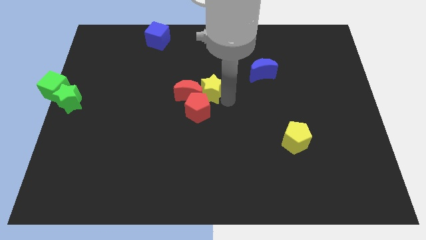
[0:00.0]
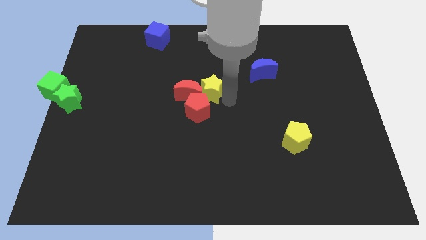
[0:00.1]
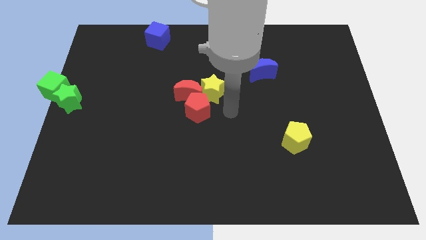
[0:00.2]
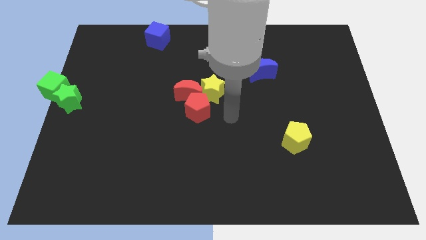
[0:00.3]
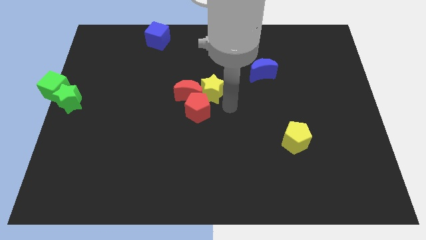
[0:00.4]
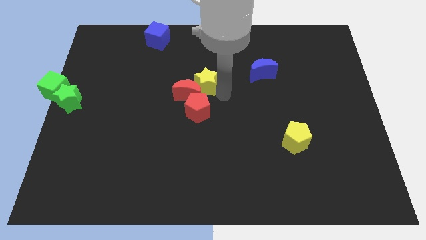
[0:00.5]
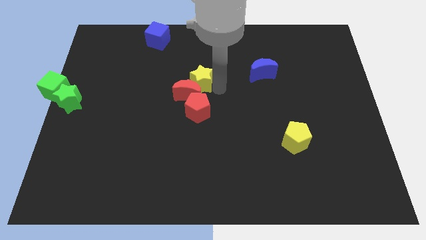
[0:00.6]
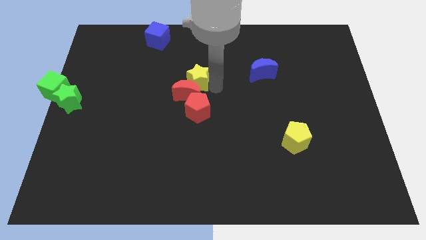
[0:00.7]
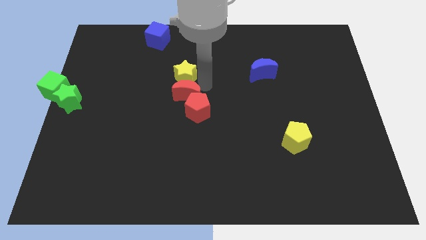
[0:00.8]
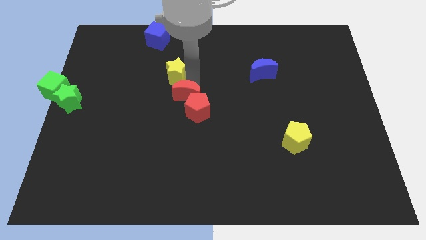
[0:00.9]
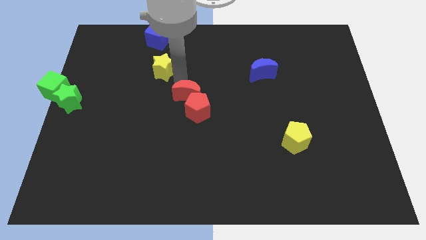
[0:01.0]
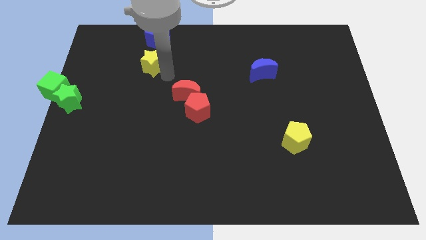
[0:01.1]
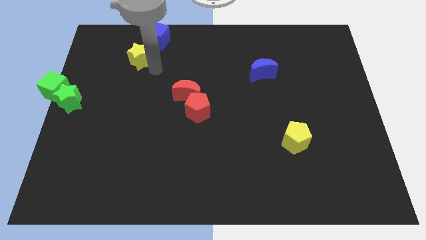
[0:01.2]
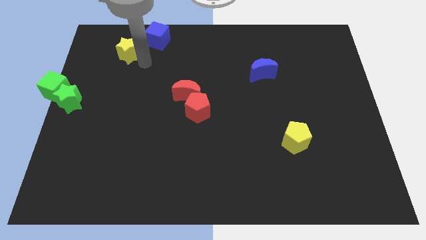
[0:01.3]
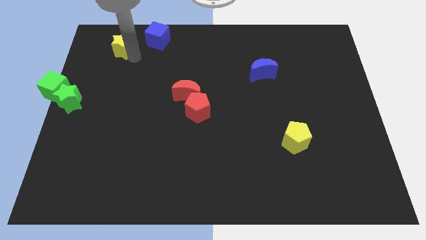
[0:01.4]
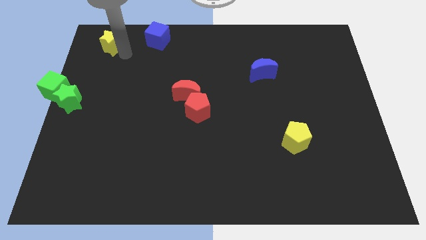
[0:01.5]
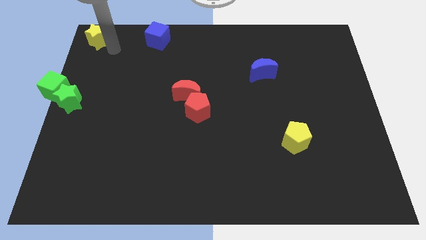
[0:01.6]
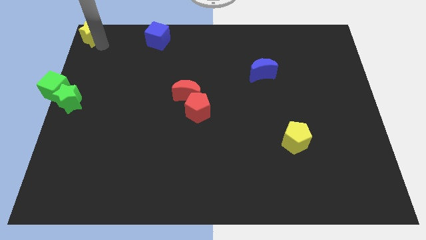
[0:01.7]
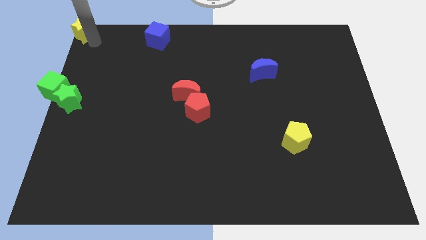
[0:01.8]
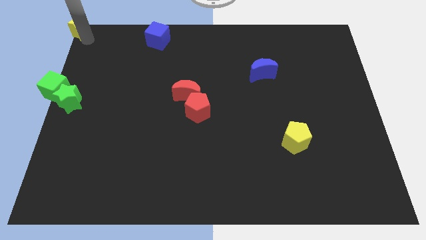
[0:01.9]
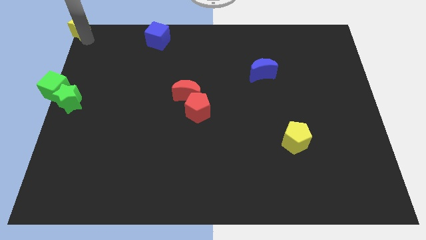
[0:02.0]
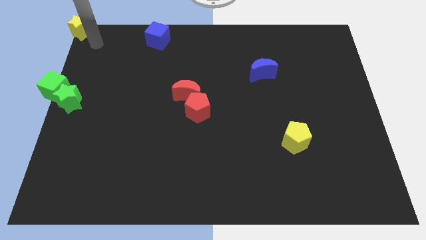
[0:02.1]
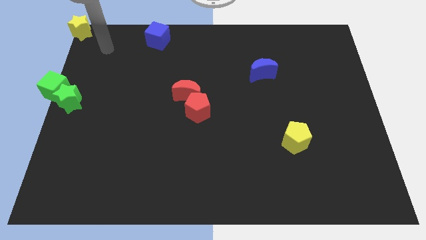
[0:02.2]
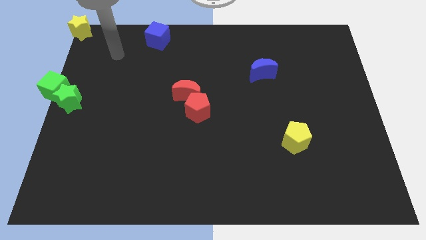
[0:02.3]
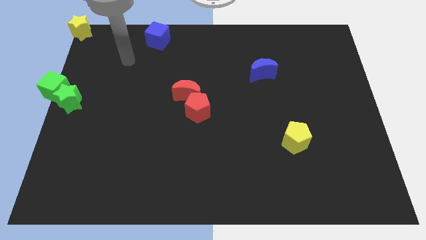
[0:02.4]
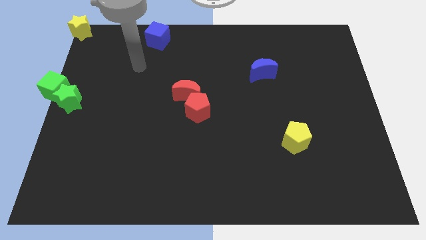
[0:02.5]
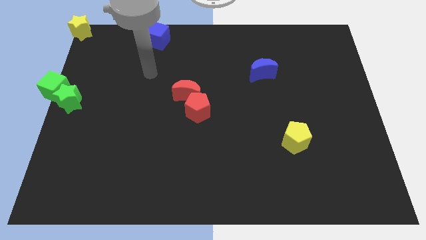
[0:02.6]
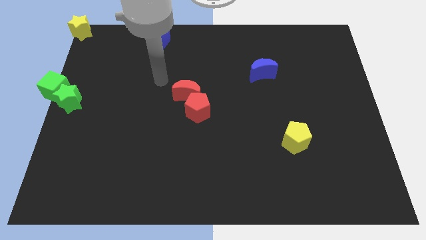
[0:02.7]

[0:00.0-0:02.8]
place yellow star at the top left corner of the board

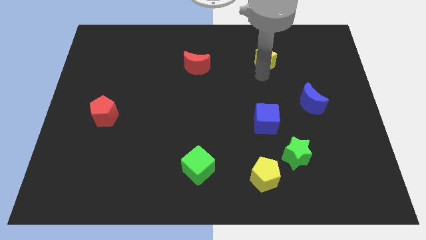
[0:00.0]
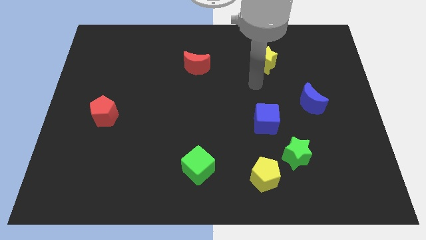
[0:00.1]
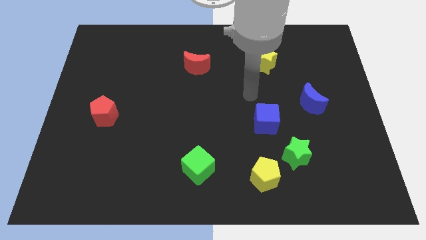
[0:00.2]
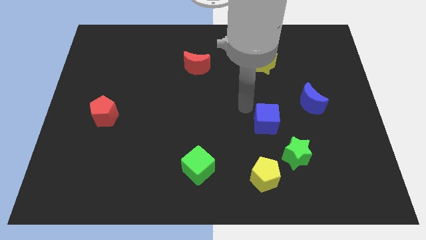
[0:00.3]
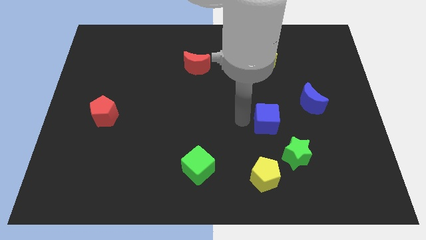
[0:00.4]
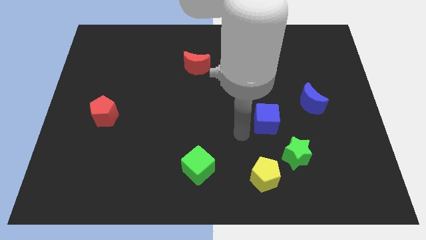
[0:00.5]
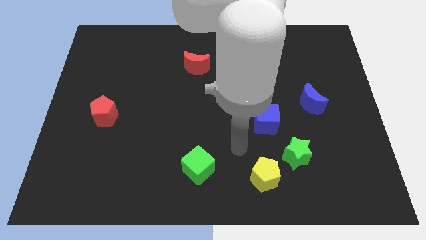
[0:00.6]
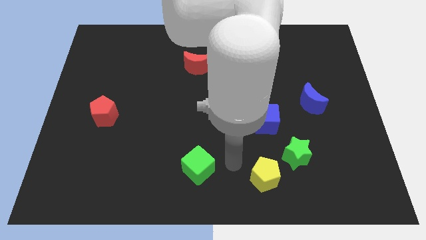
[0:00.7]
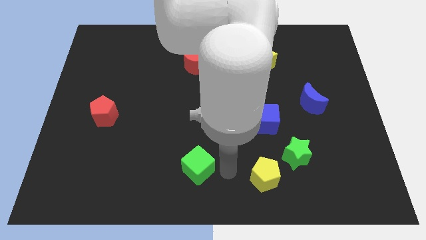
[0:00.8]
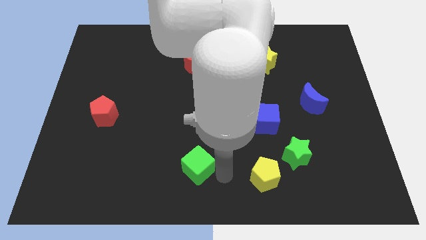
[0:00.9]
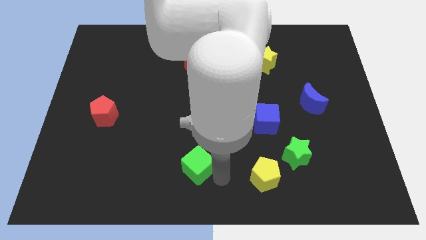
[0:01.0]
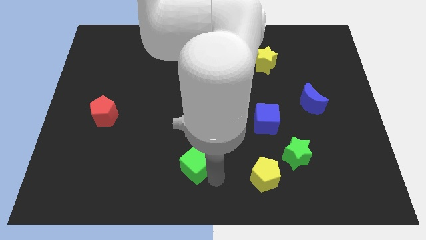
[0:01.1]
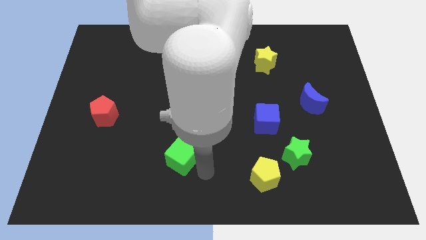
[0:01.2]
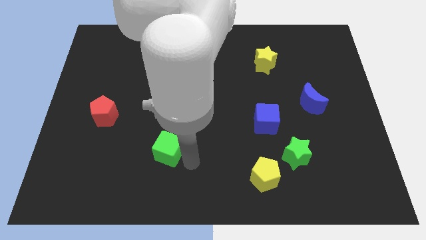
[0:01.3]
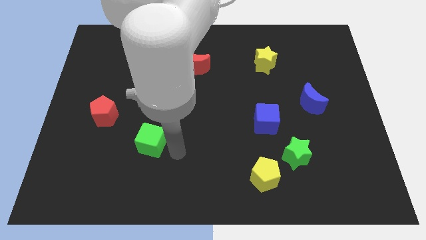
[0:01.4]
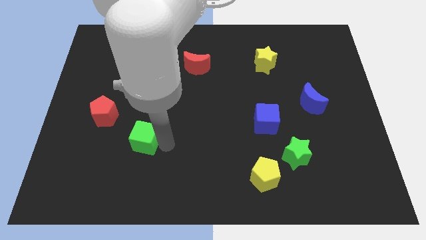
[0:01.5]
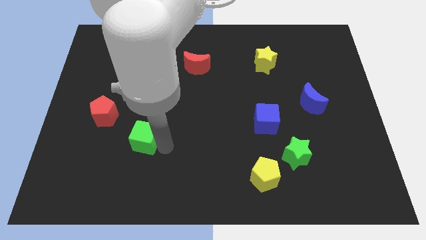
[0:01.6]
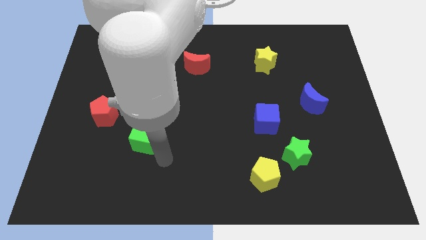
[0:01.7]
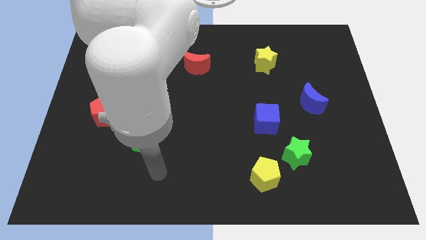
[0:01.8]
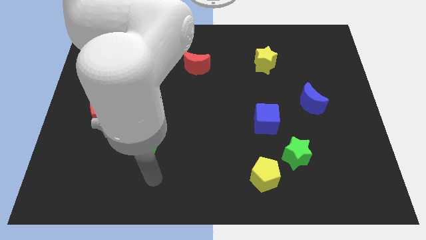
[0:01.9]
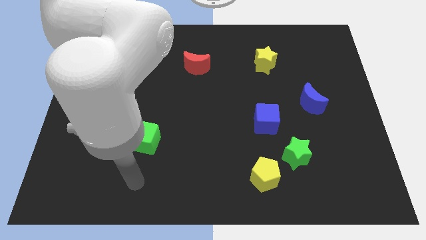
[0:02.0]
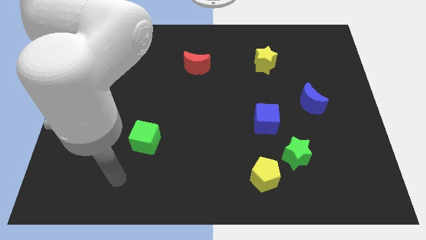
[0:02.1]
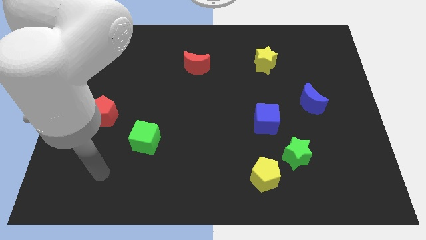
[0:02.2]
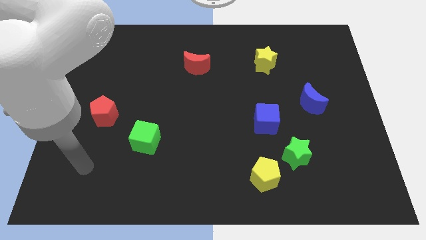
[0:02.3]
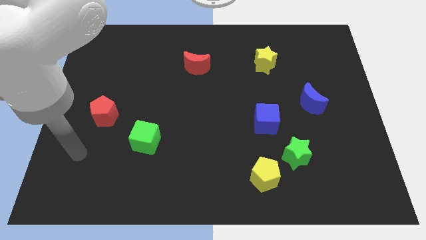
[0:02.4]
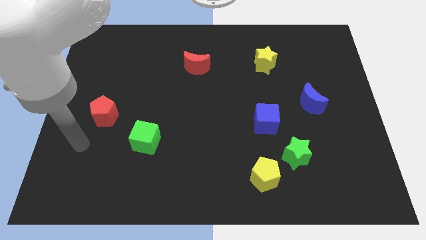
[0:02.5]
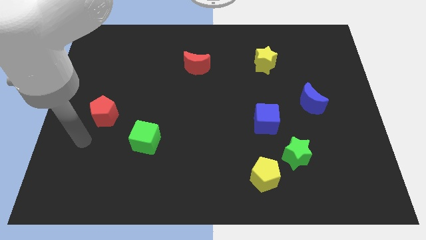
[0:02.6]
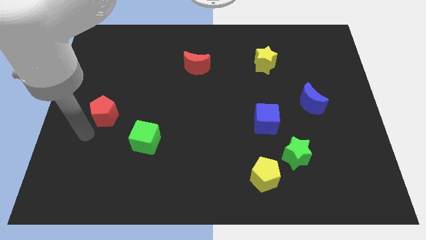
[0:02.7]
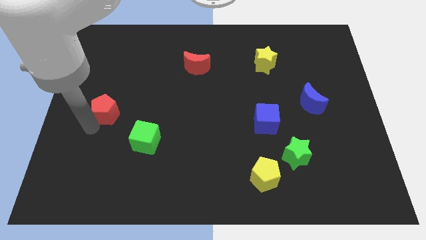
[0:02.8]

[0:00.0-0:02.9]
push the green cube diagonally to red pentagon

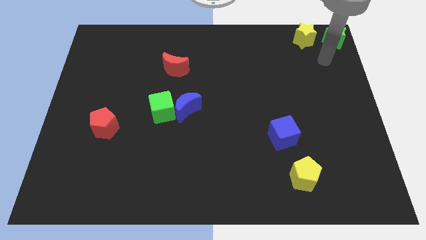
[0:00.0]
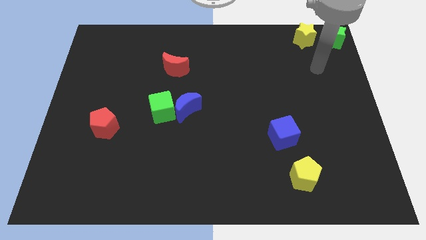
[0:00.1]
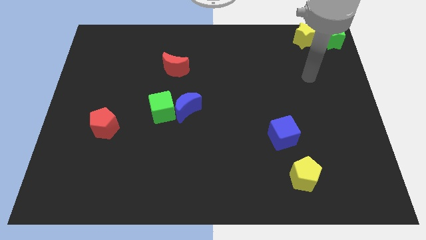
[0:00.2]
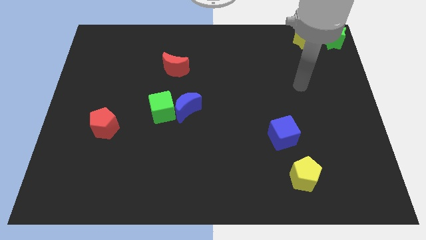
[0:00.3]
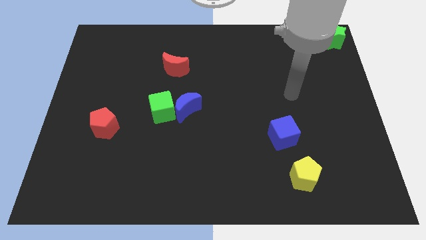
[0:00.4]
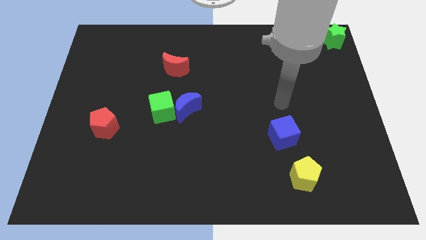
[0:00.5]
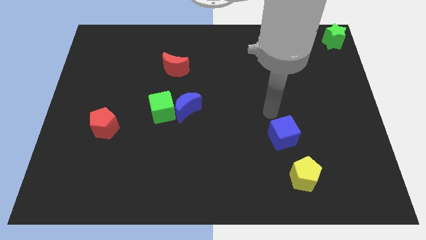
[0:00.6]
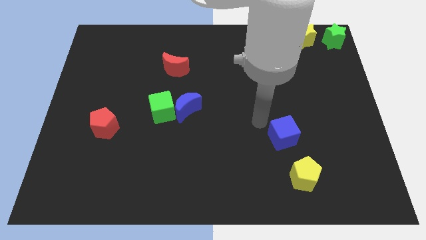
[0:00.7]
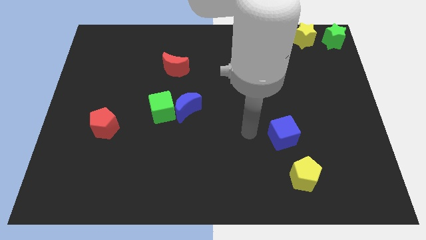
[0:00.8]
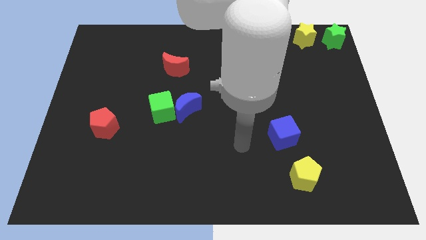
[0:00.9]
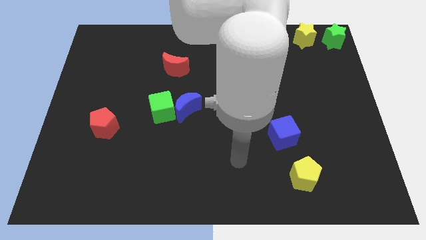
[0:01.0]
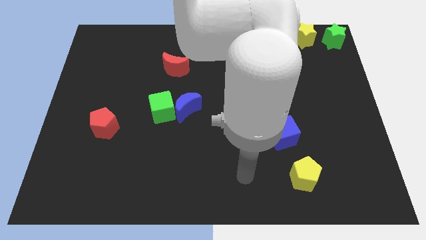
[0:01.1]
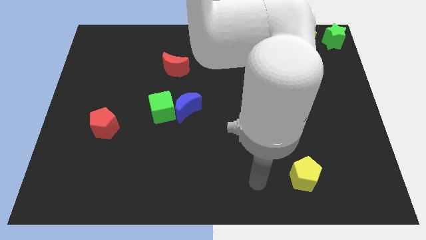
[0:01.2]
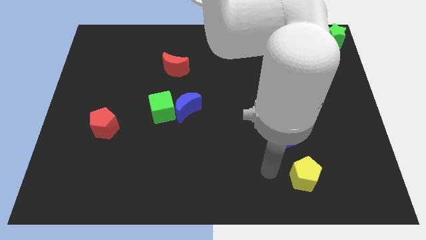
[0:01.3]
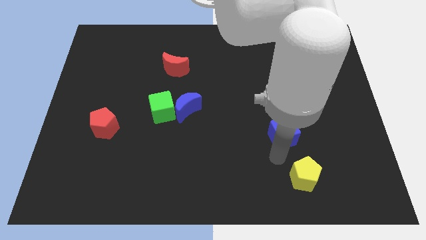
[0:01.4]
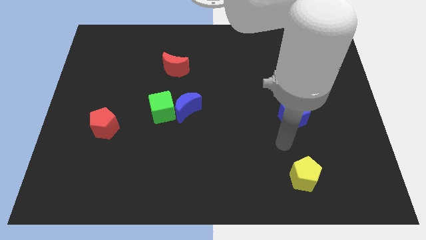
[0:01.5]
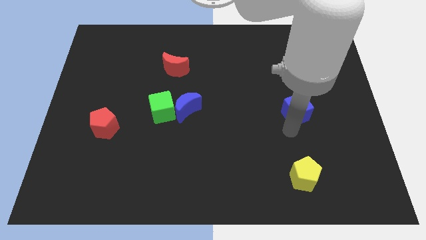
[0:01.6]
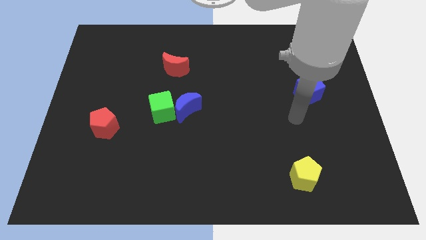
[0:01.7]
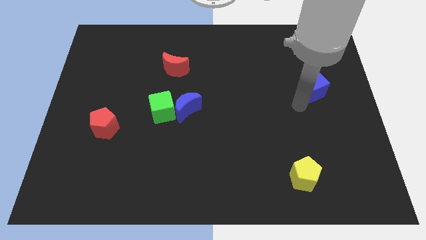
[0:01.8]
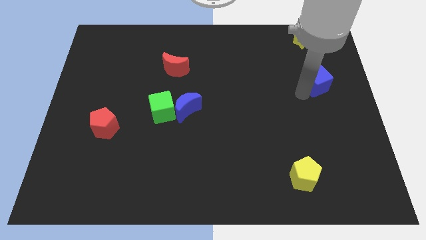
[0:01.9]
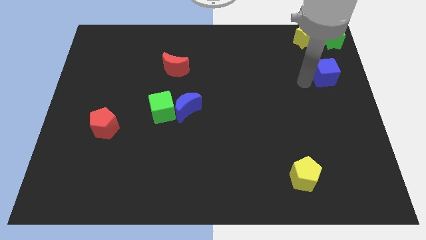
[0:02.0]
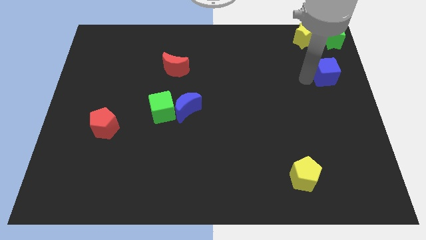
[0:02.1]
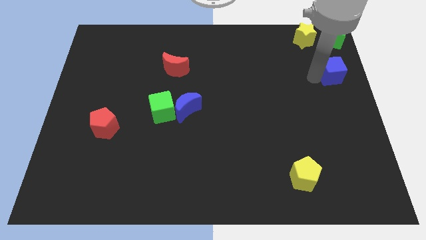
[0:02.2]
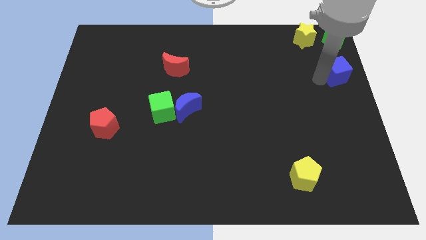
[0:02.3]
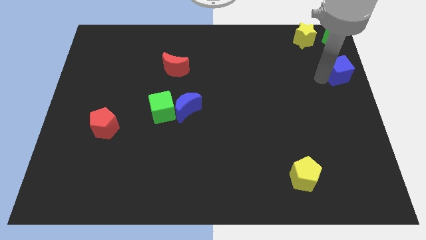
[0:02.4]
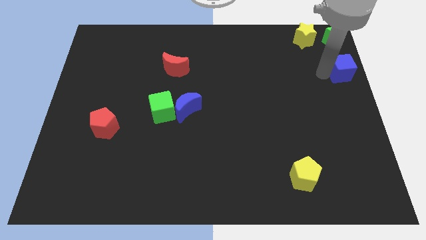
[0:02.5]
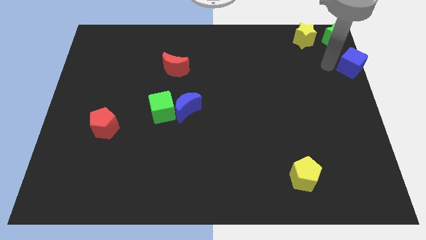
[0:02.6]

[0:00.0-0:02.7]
push the blue cube towards the green star

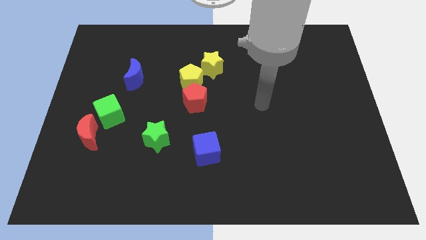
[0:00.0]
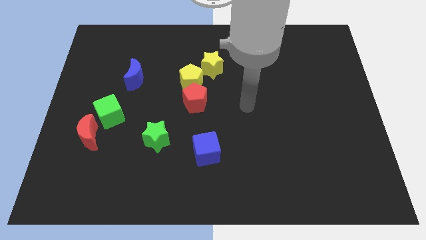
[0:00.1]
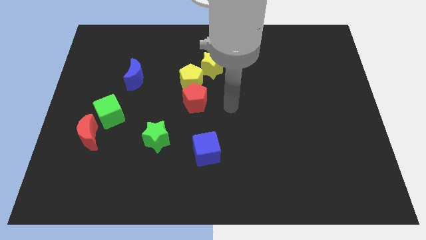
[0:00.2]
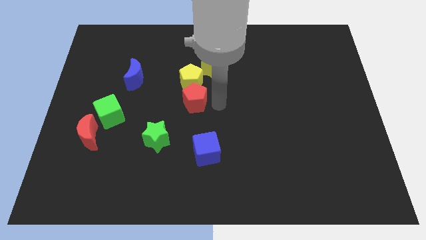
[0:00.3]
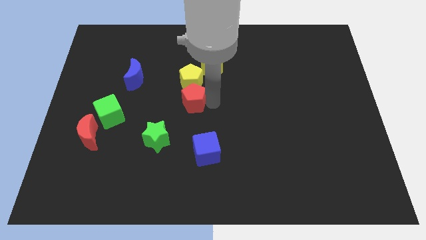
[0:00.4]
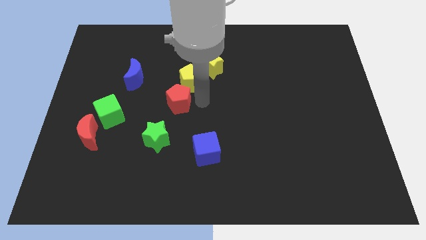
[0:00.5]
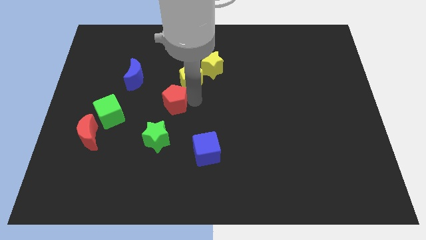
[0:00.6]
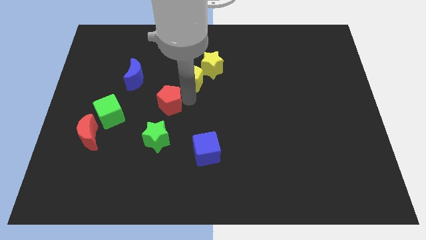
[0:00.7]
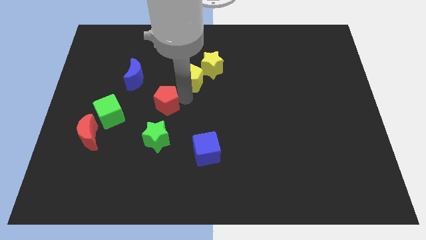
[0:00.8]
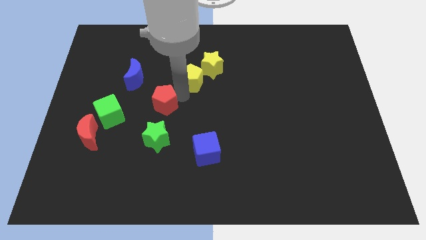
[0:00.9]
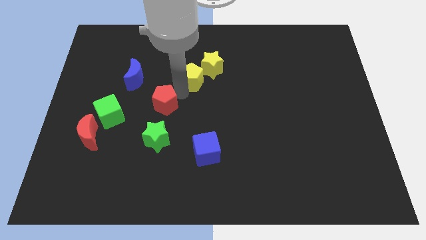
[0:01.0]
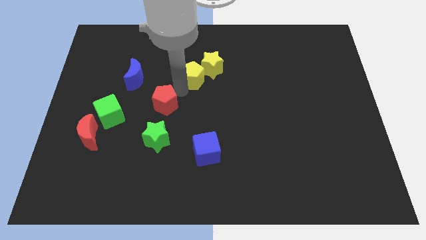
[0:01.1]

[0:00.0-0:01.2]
move the red pentagon to the top of the green star
